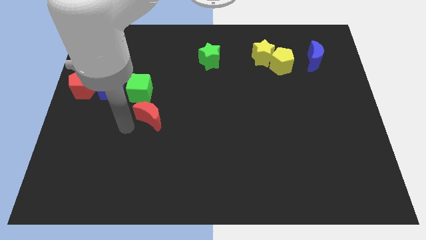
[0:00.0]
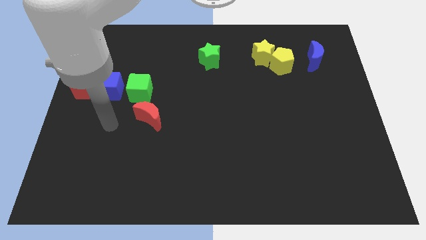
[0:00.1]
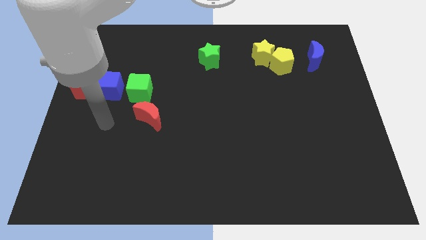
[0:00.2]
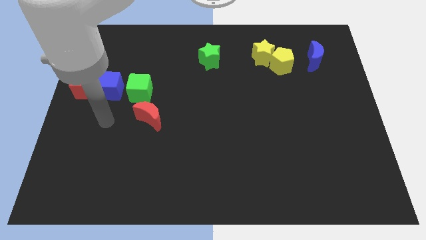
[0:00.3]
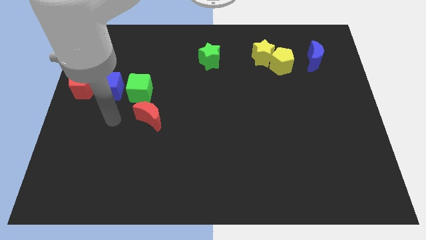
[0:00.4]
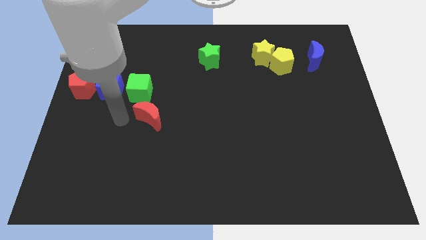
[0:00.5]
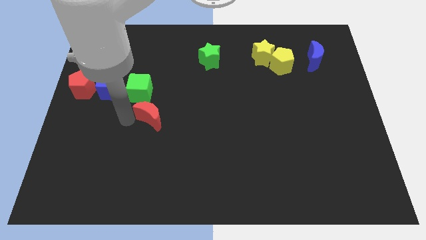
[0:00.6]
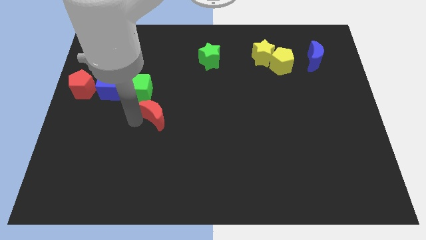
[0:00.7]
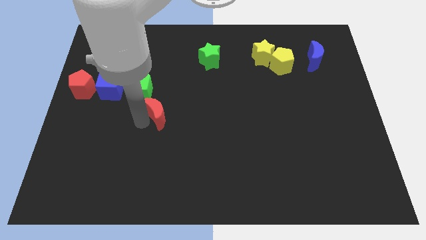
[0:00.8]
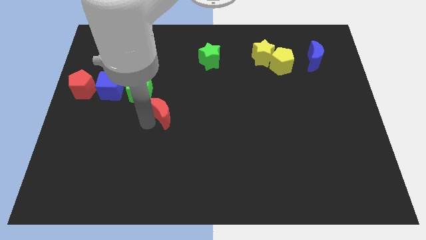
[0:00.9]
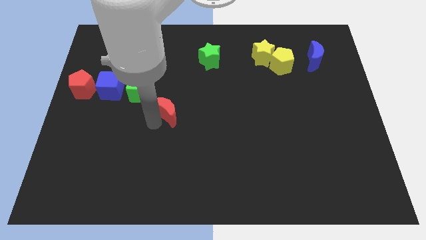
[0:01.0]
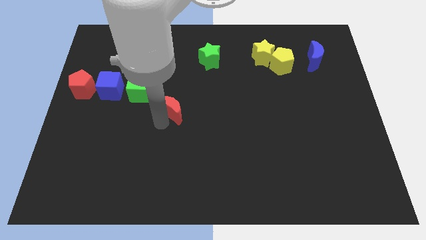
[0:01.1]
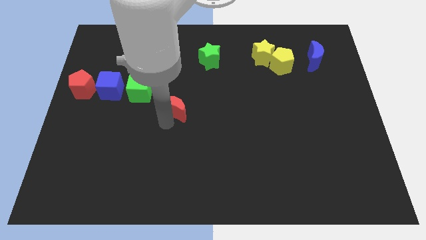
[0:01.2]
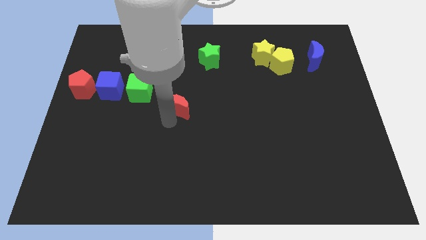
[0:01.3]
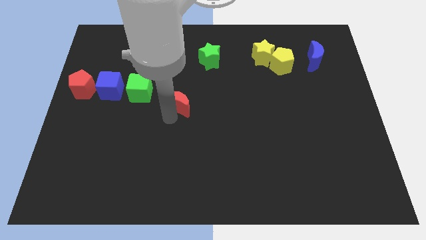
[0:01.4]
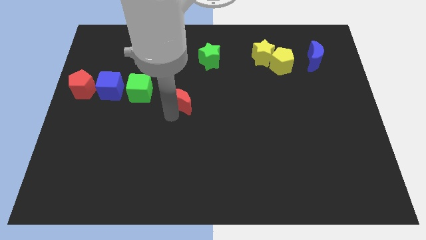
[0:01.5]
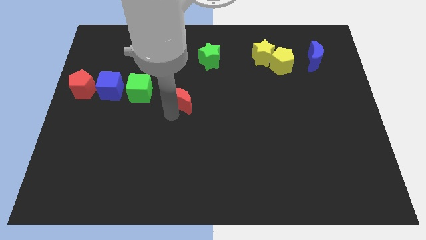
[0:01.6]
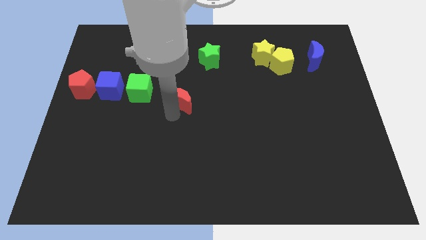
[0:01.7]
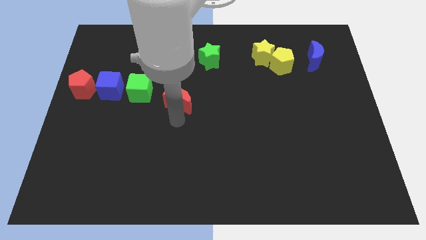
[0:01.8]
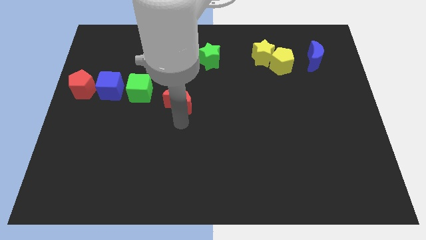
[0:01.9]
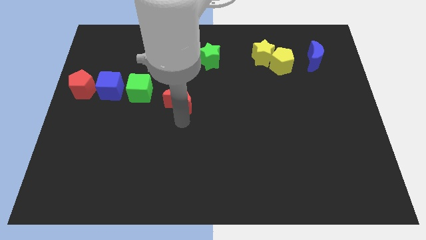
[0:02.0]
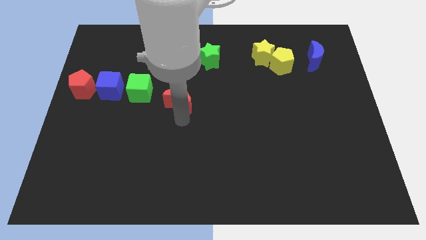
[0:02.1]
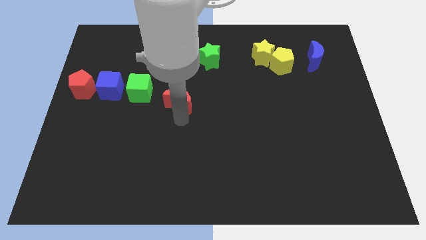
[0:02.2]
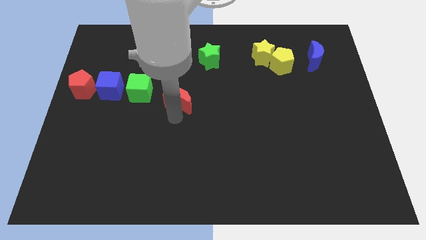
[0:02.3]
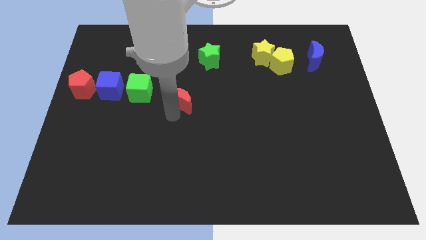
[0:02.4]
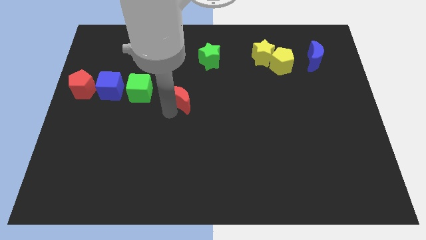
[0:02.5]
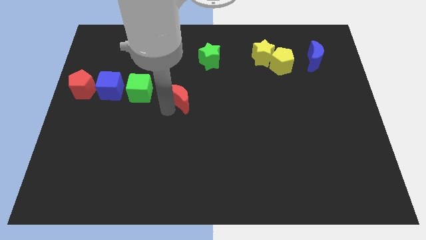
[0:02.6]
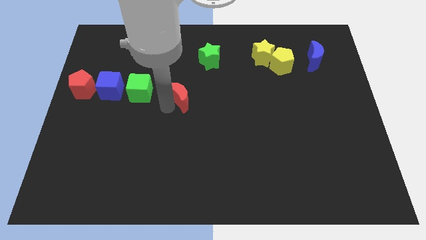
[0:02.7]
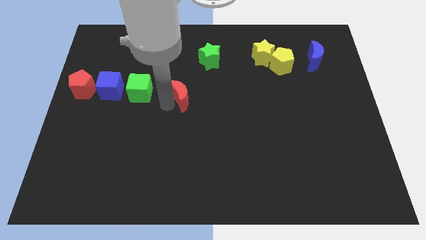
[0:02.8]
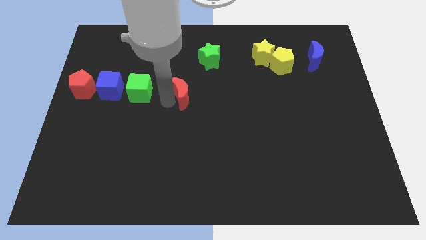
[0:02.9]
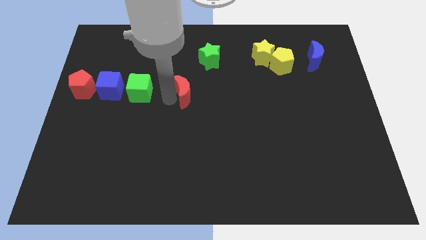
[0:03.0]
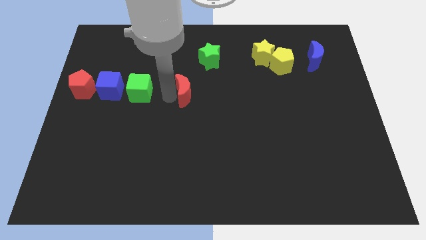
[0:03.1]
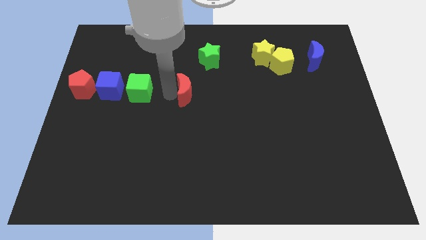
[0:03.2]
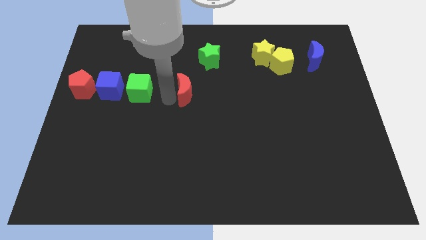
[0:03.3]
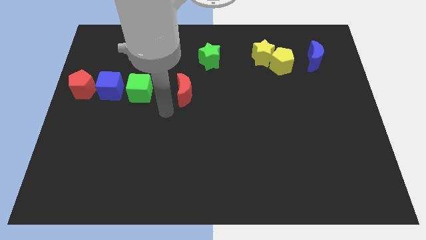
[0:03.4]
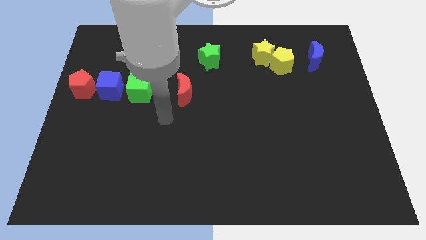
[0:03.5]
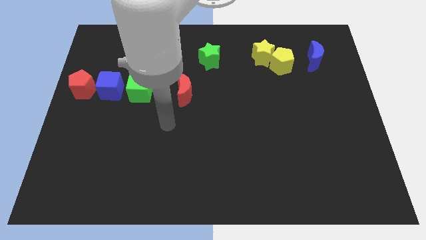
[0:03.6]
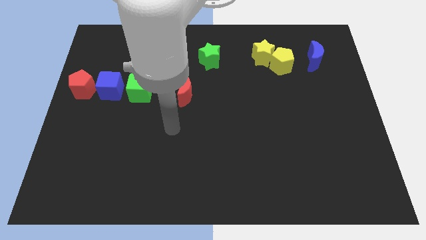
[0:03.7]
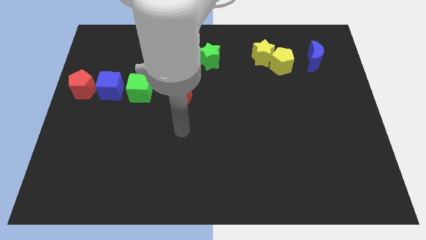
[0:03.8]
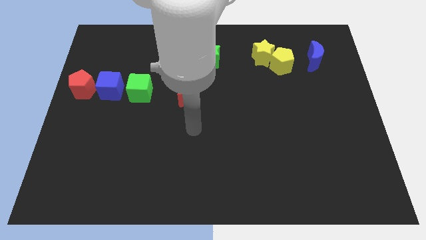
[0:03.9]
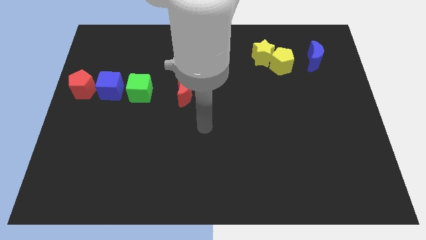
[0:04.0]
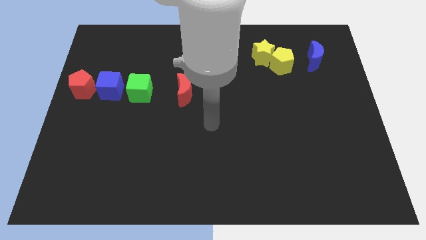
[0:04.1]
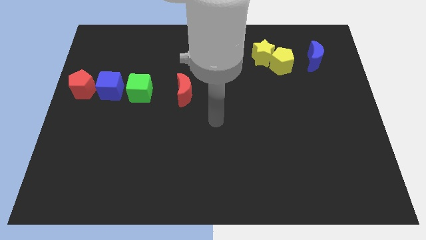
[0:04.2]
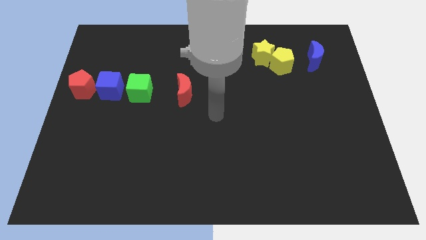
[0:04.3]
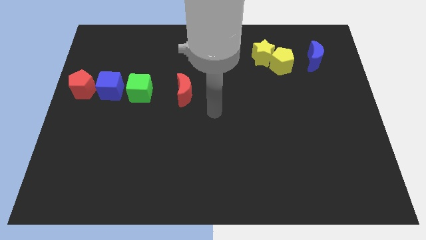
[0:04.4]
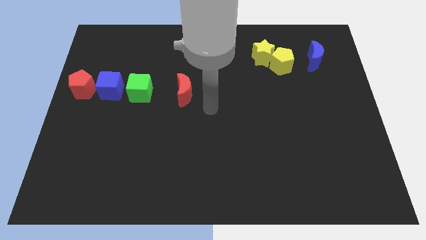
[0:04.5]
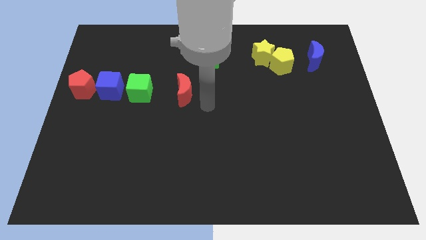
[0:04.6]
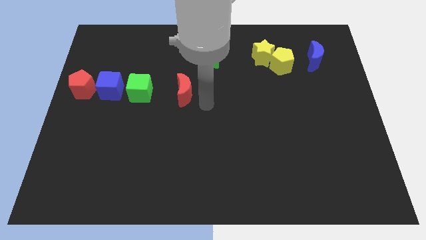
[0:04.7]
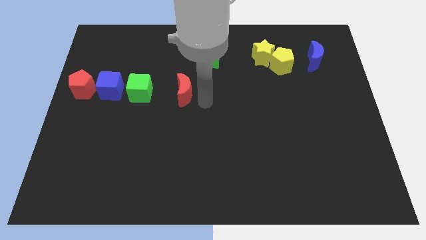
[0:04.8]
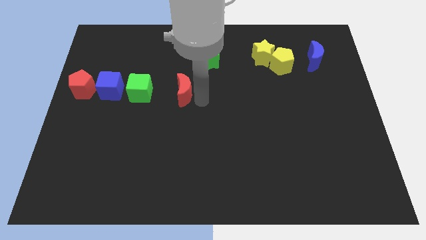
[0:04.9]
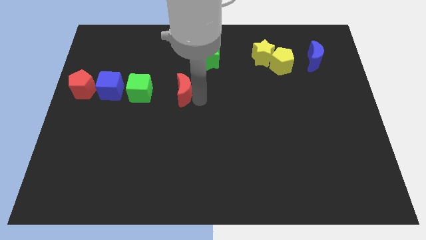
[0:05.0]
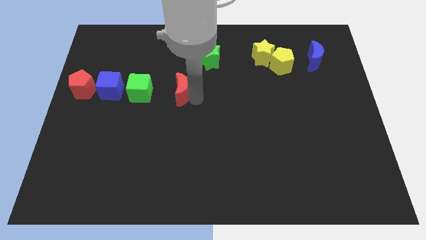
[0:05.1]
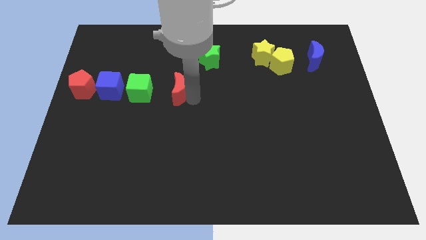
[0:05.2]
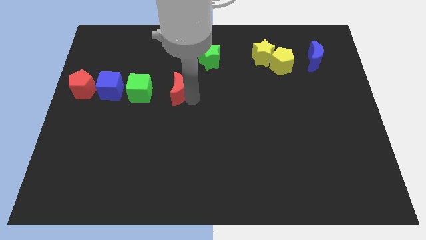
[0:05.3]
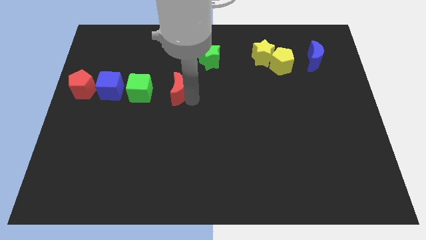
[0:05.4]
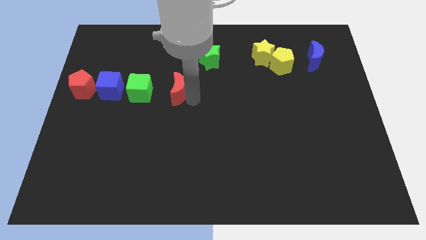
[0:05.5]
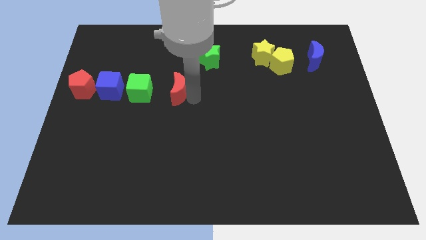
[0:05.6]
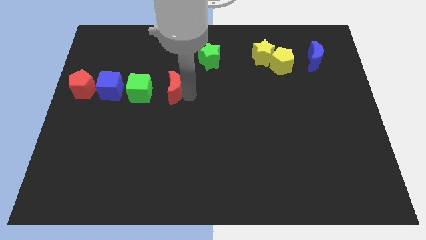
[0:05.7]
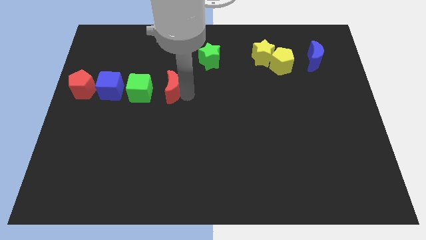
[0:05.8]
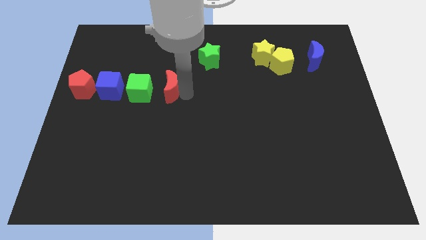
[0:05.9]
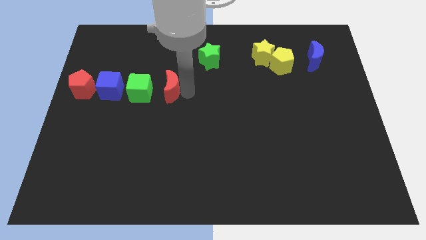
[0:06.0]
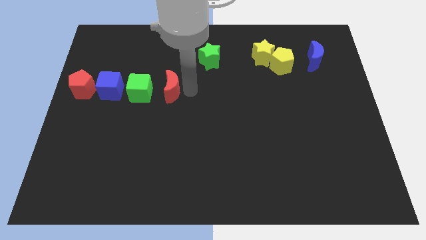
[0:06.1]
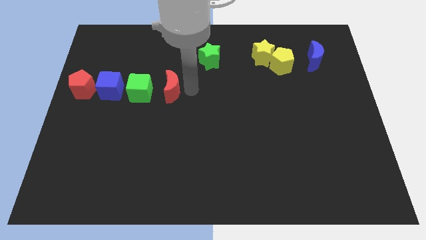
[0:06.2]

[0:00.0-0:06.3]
place the red moon to the right of the green cube

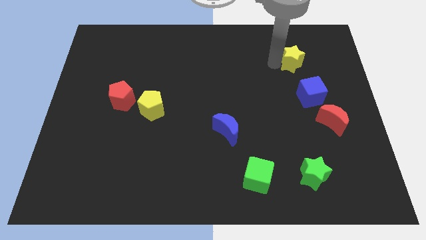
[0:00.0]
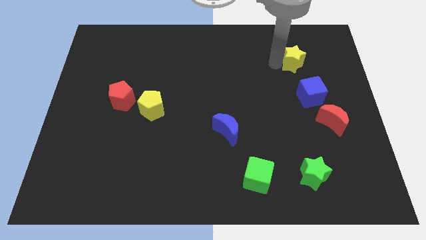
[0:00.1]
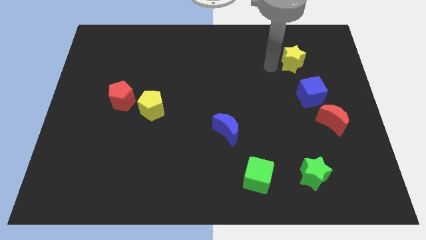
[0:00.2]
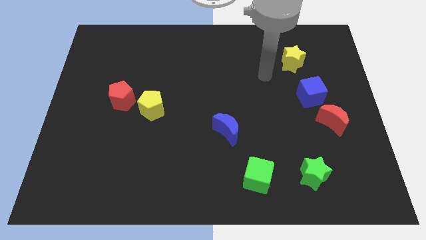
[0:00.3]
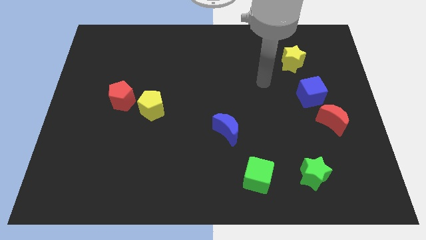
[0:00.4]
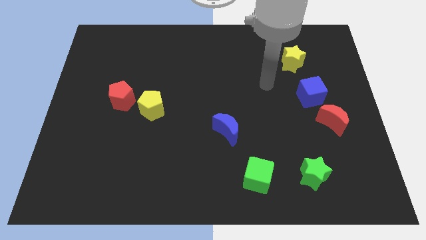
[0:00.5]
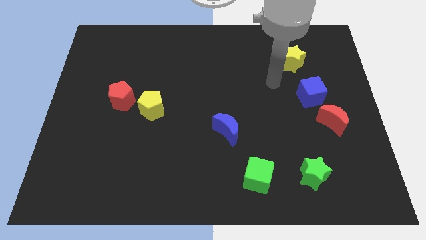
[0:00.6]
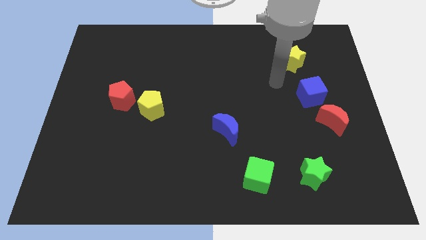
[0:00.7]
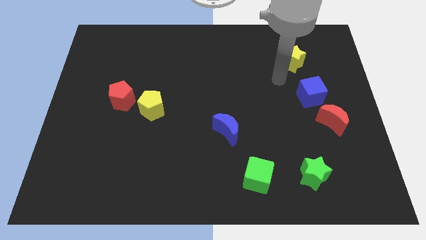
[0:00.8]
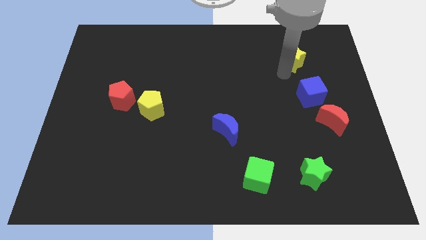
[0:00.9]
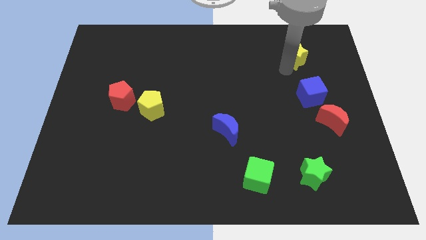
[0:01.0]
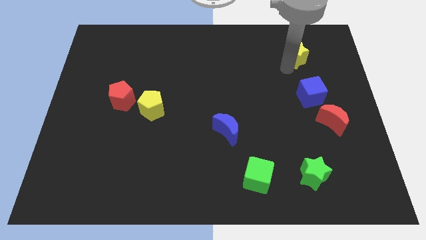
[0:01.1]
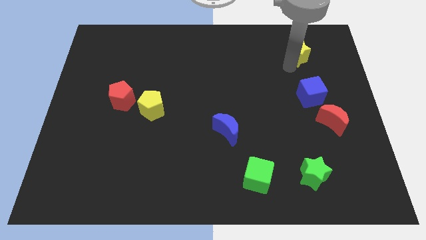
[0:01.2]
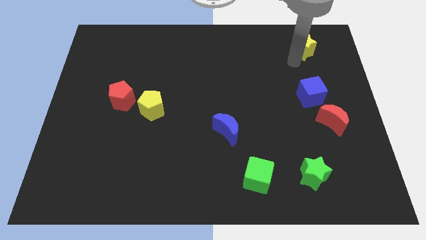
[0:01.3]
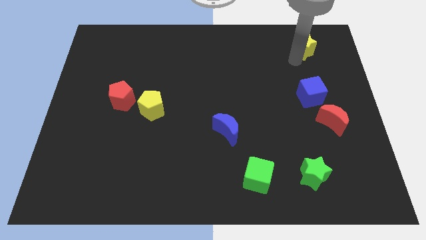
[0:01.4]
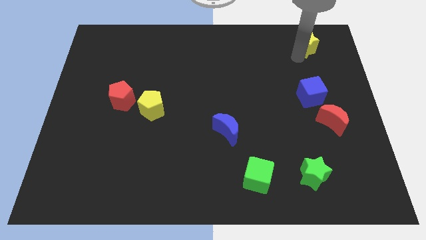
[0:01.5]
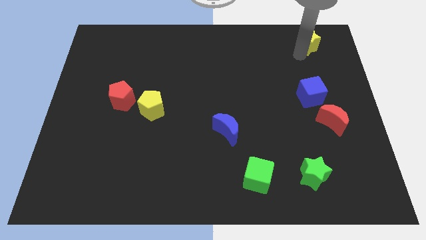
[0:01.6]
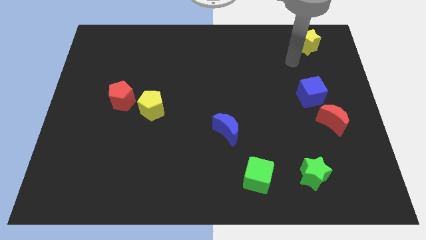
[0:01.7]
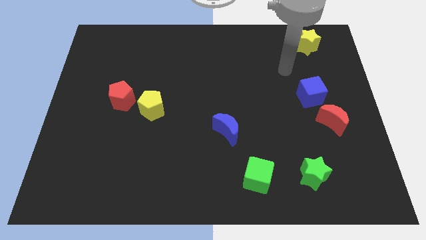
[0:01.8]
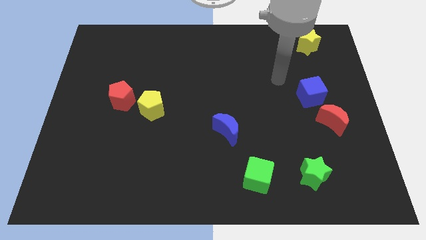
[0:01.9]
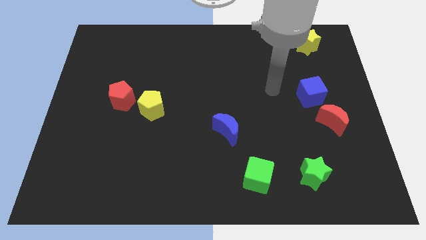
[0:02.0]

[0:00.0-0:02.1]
push yellow star towards top right

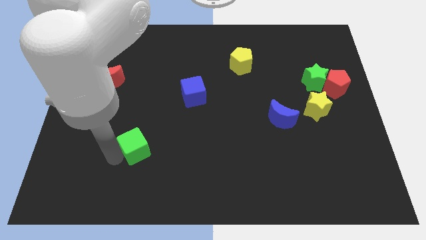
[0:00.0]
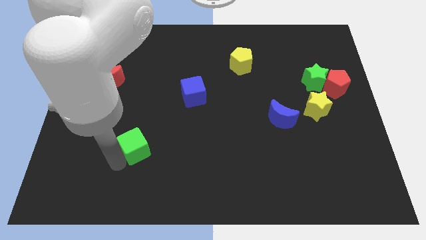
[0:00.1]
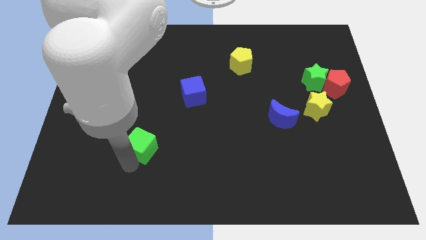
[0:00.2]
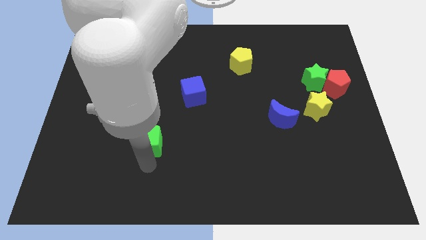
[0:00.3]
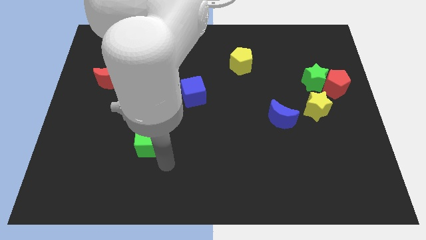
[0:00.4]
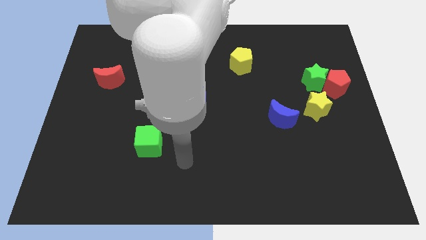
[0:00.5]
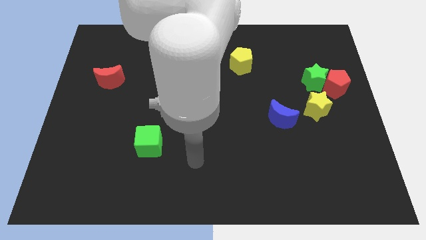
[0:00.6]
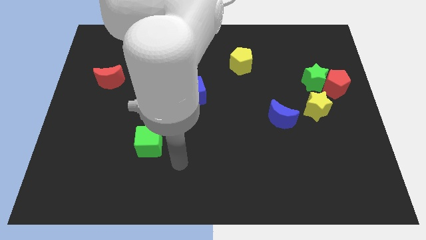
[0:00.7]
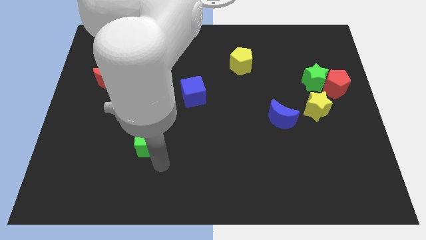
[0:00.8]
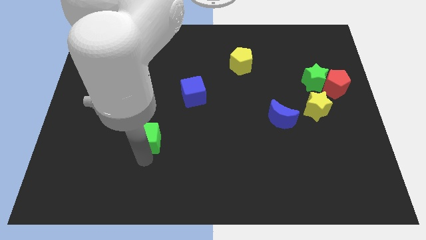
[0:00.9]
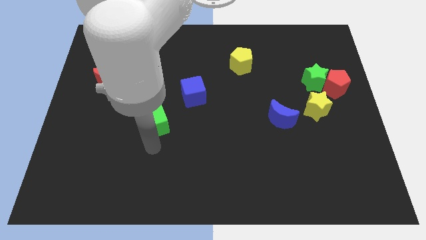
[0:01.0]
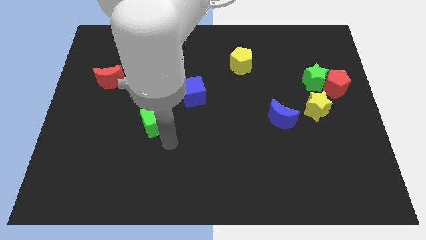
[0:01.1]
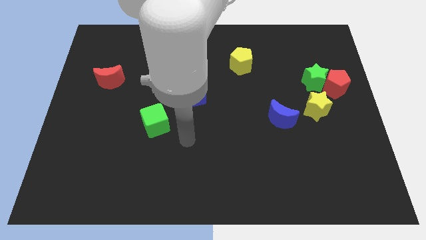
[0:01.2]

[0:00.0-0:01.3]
move the green cube slightly up
